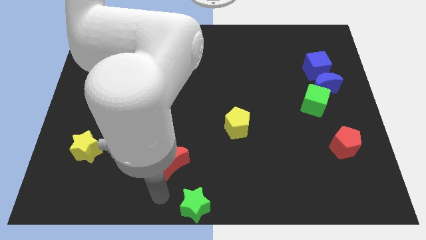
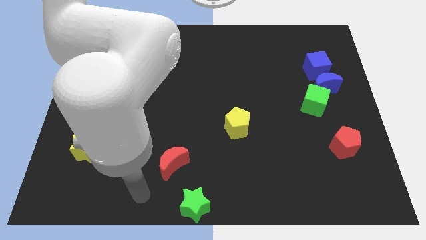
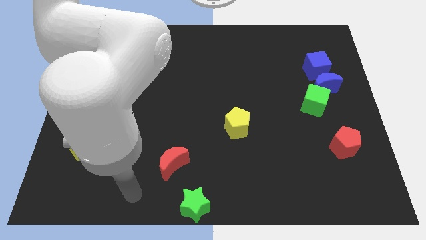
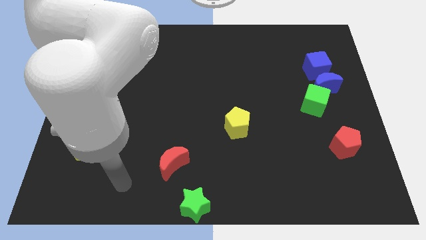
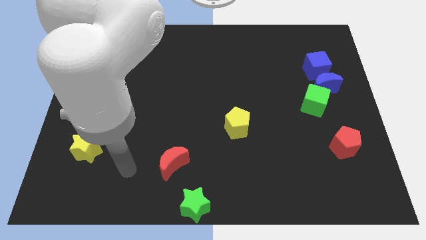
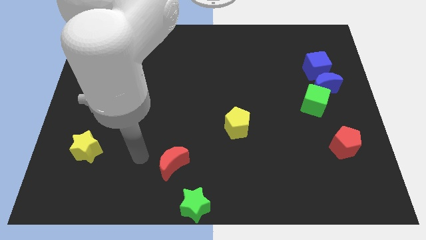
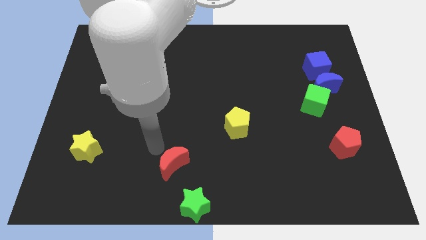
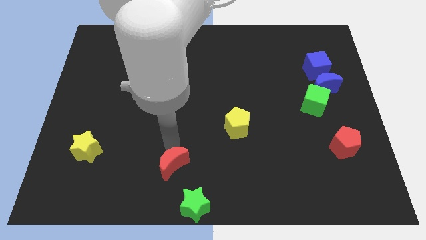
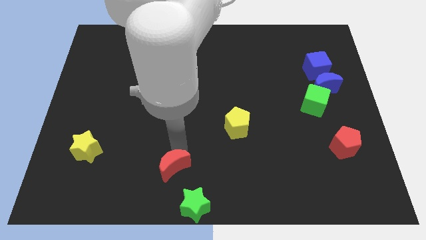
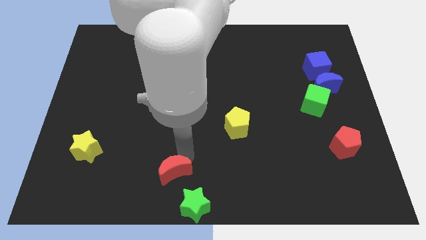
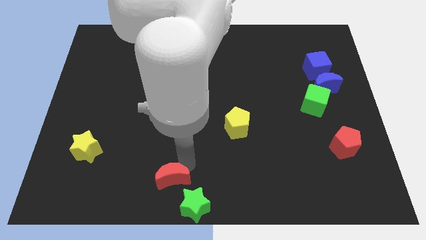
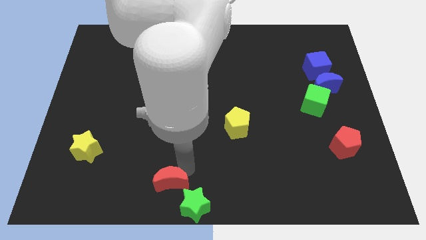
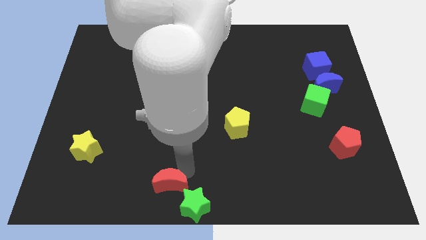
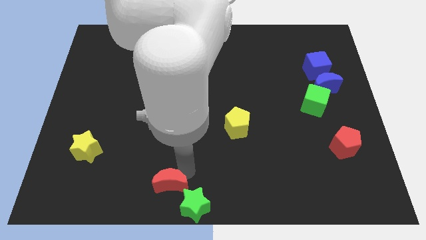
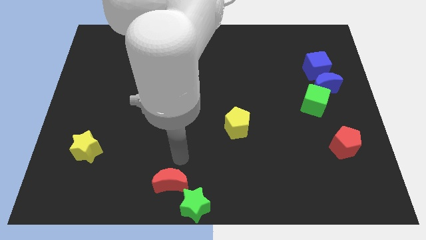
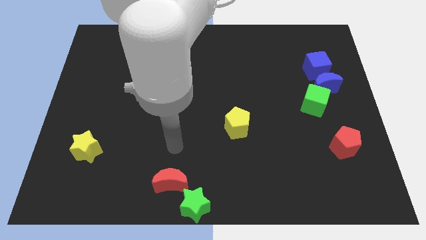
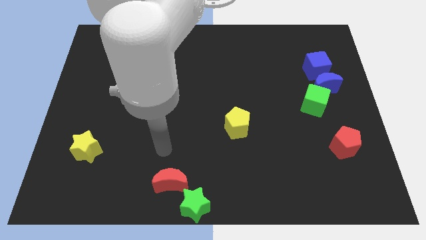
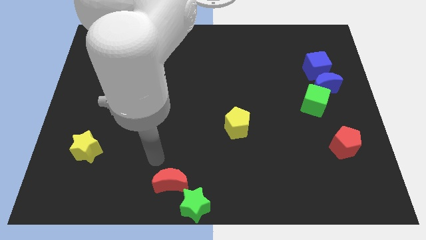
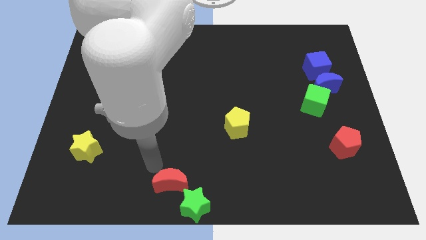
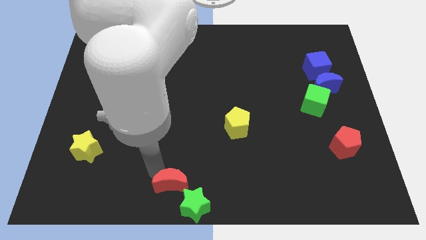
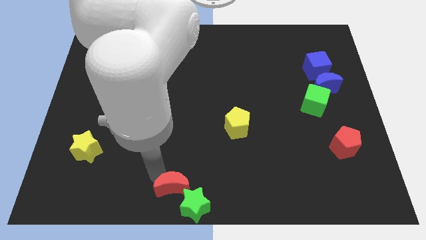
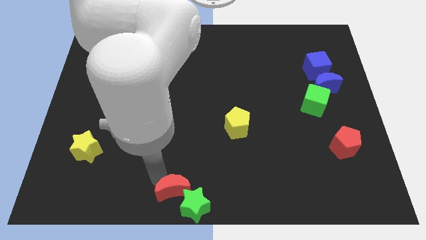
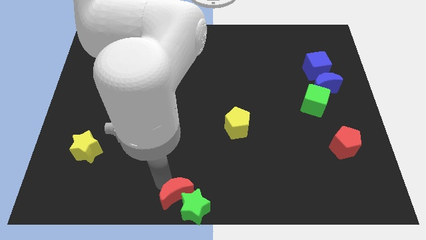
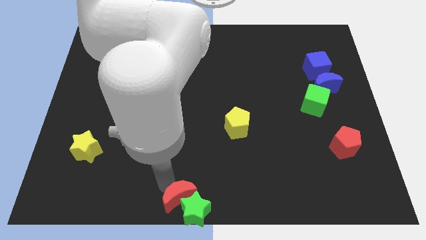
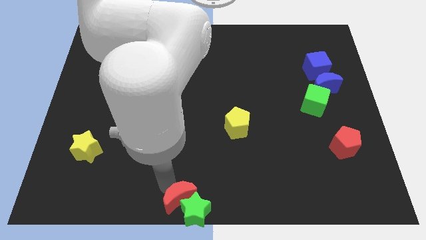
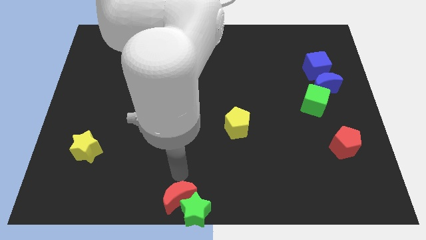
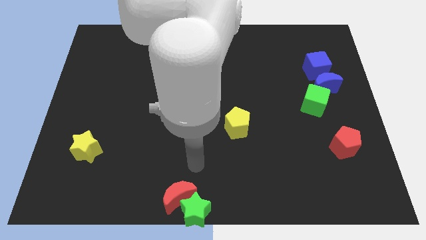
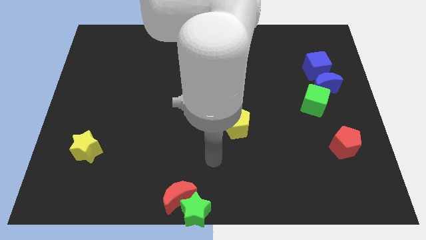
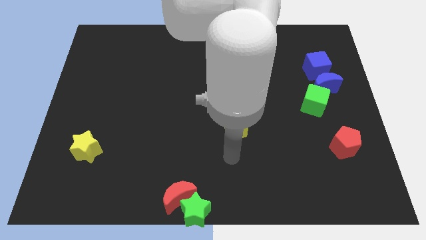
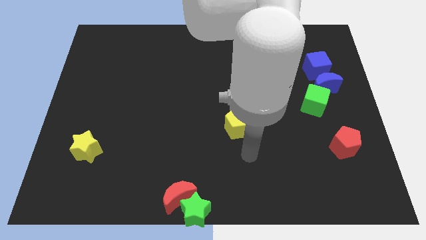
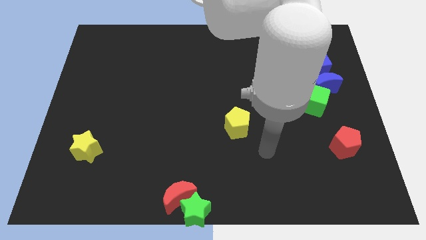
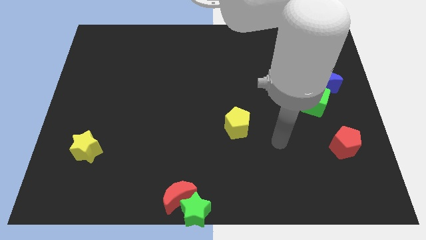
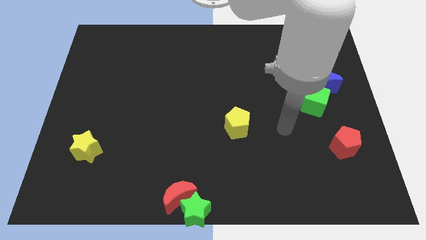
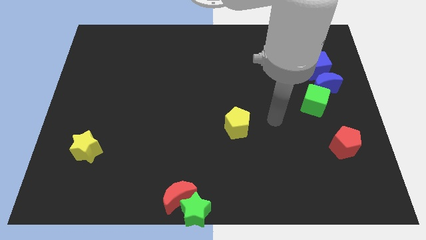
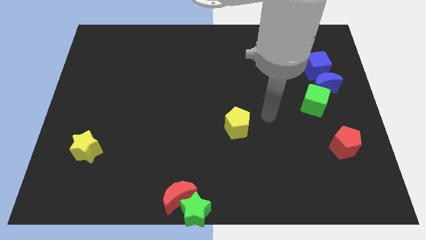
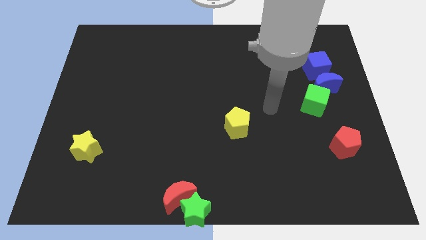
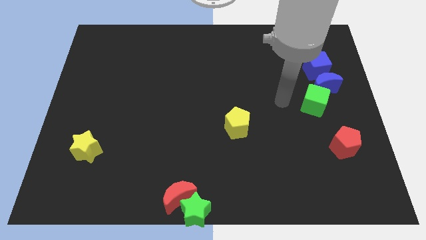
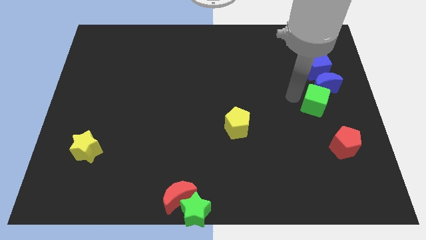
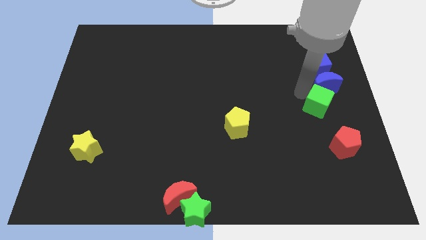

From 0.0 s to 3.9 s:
push the red moon into the green star

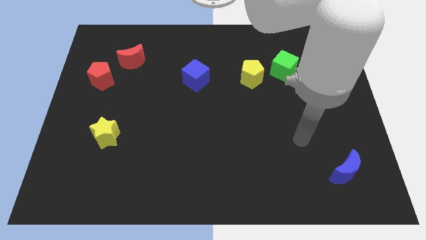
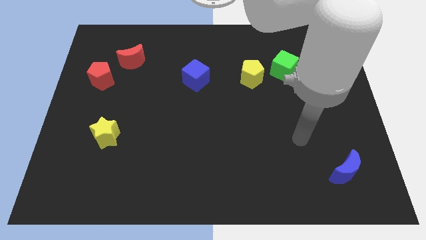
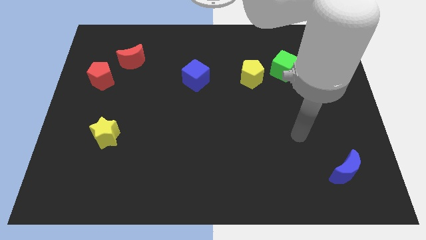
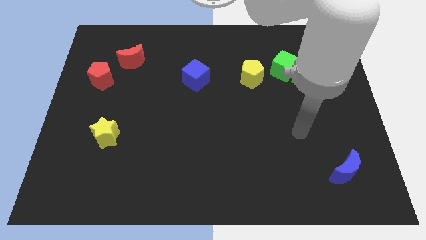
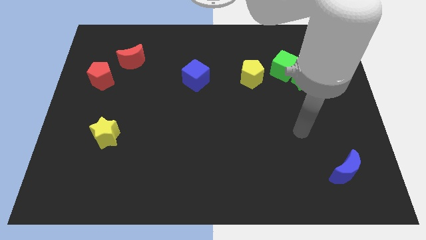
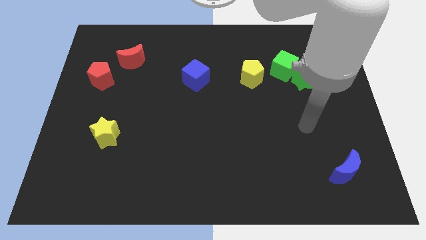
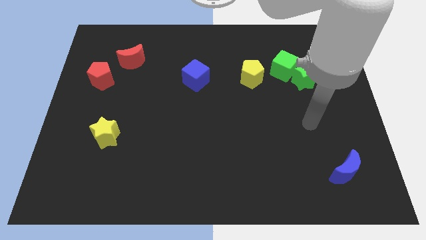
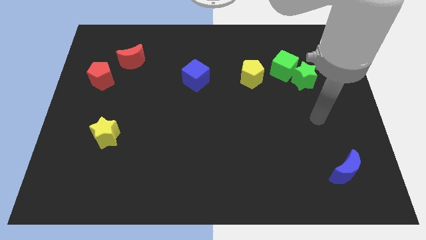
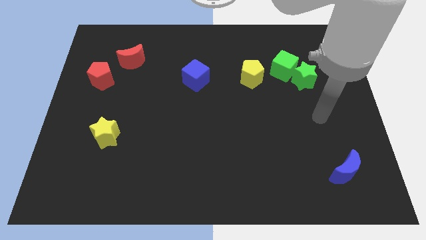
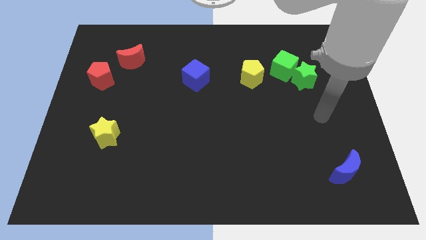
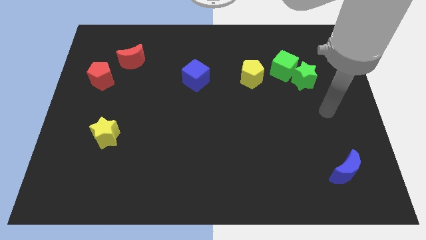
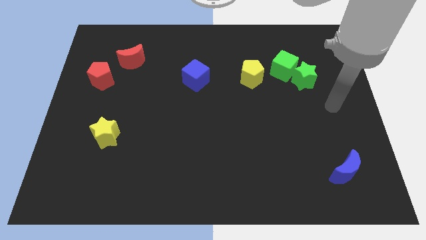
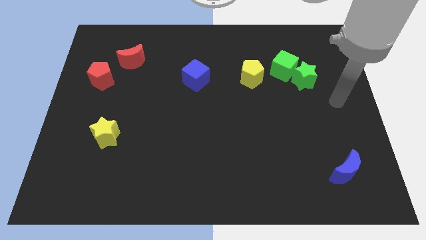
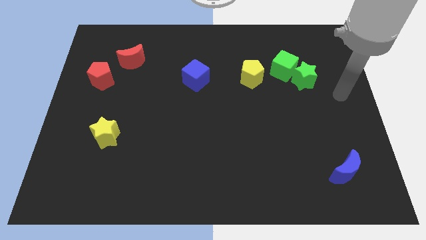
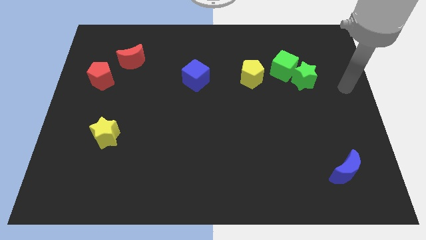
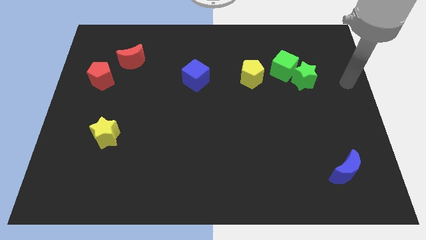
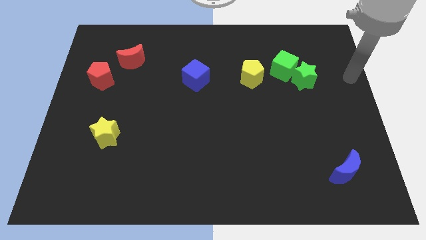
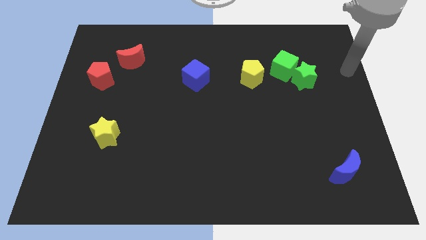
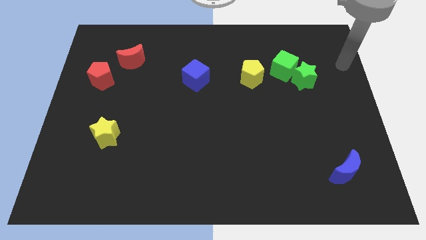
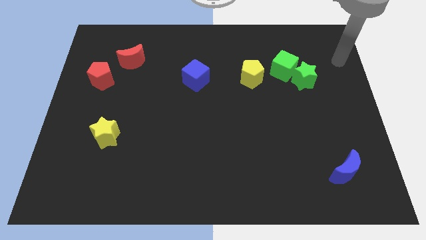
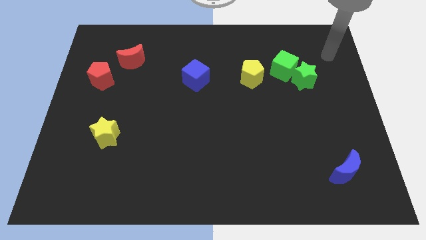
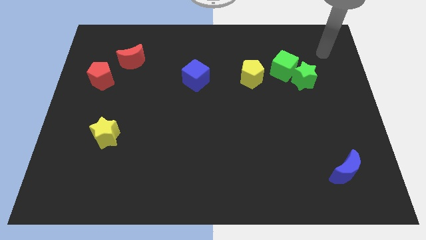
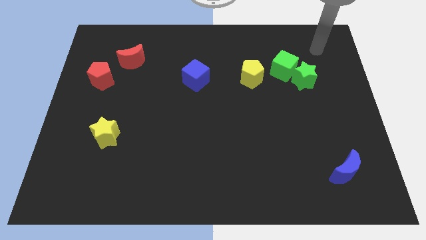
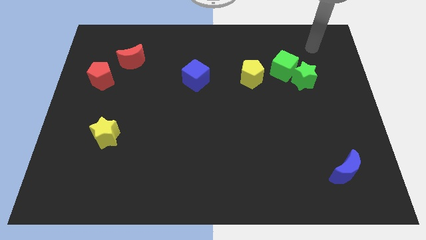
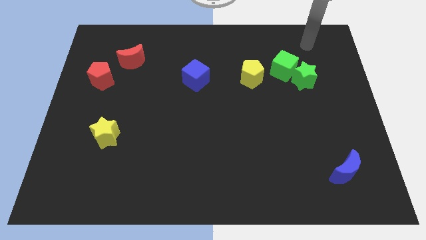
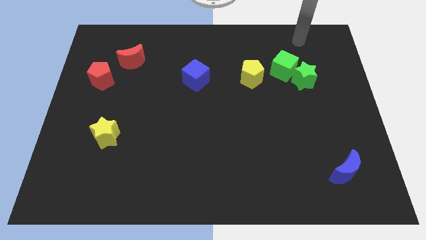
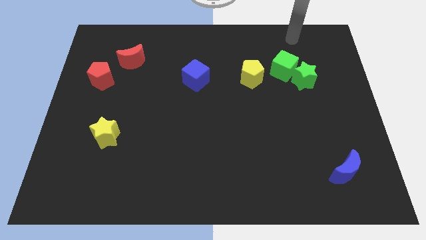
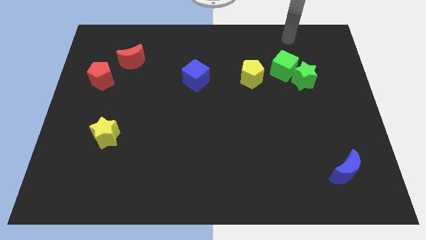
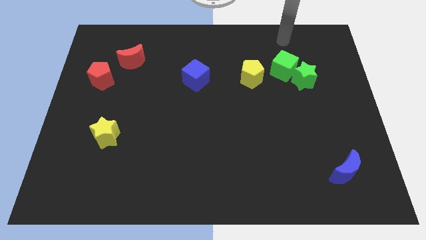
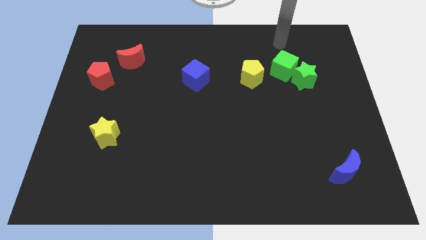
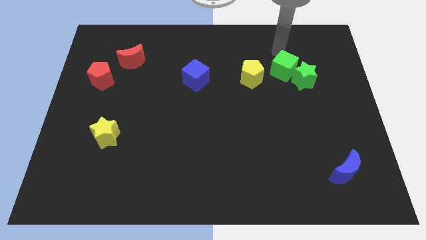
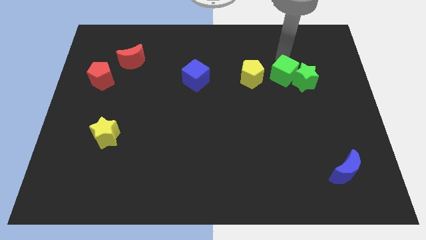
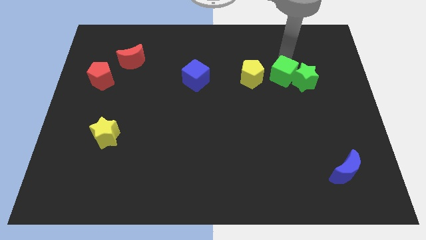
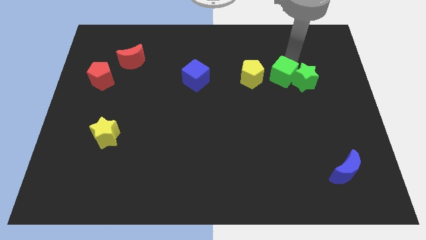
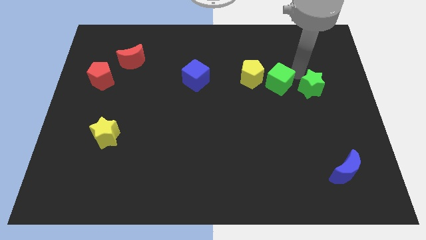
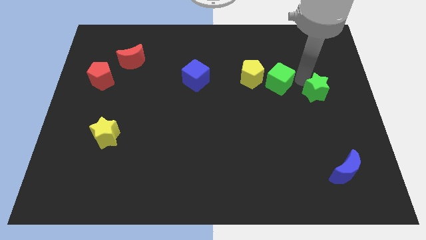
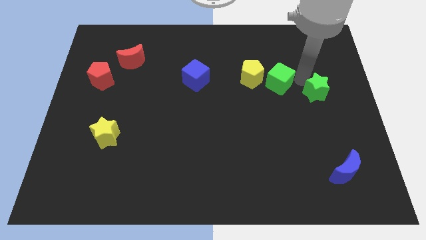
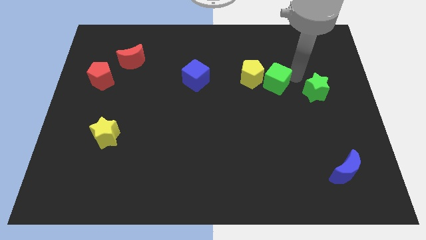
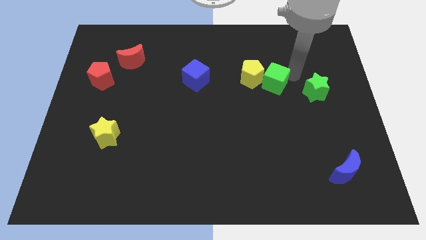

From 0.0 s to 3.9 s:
place the green cube beside the yellow pentagon

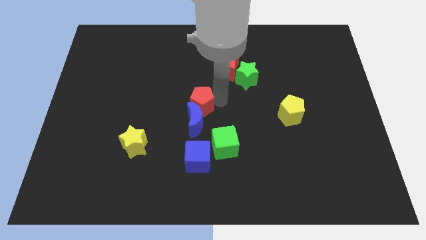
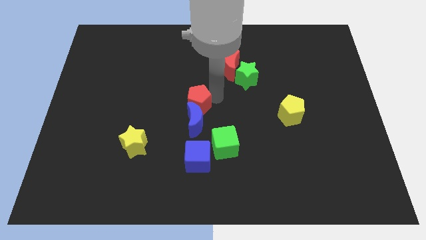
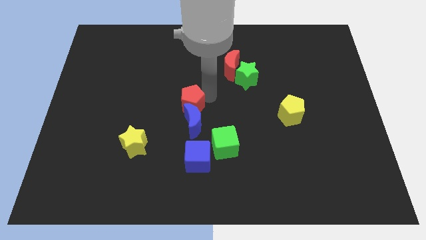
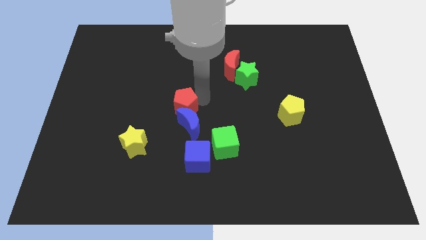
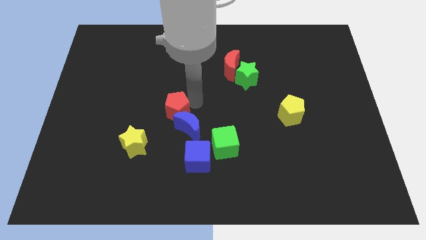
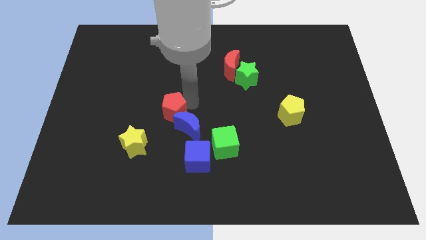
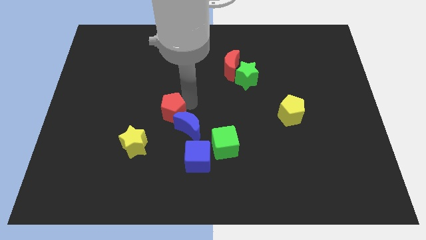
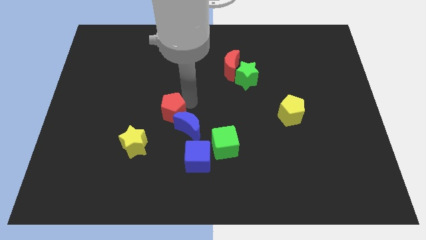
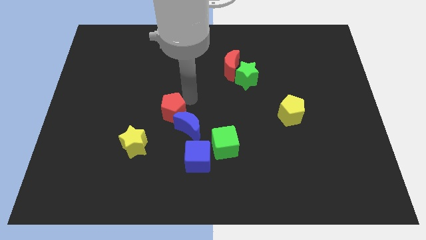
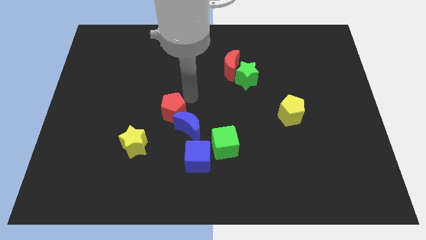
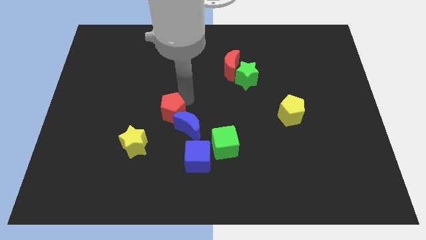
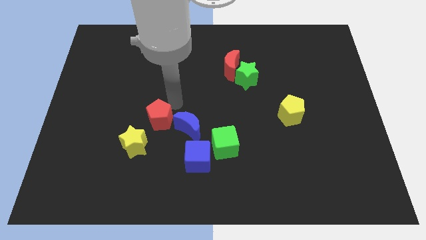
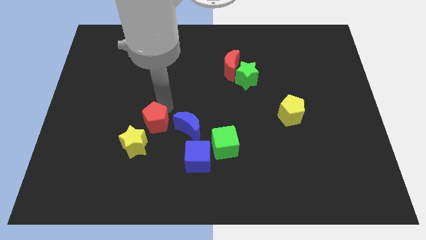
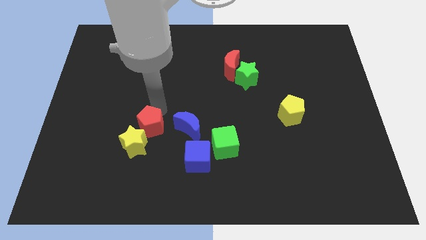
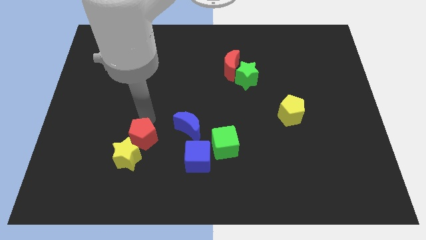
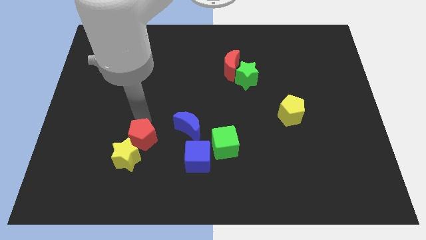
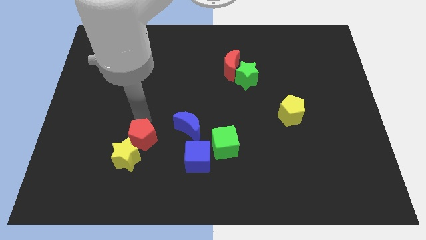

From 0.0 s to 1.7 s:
push the red pentagon into the yellow star
